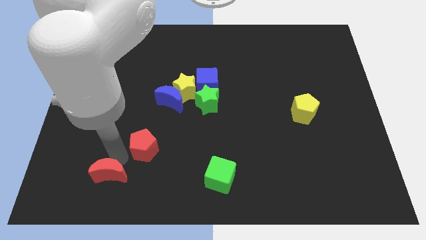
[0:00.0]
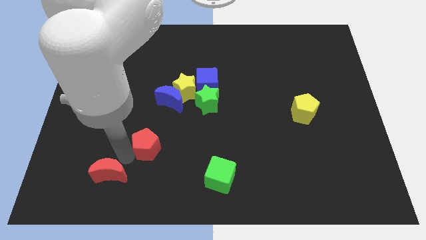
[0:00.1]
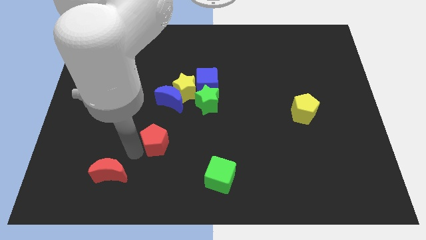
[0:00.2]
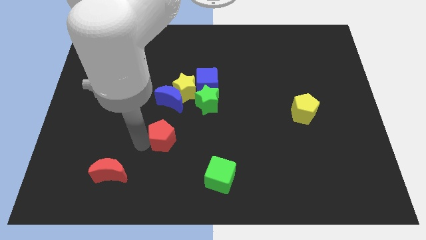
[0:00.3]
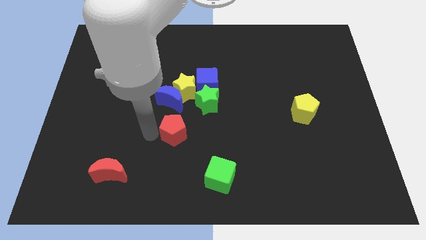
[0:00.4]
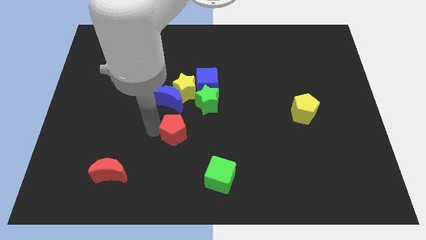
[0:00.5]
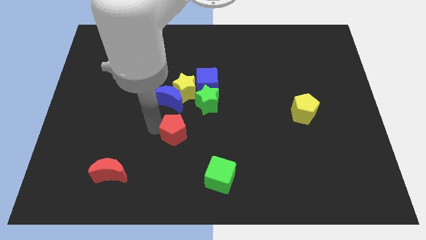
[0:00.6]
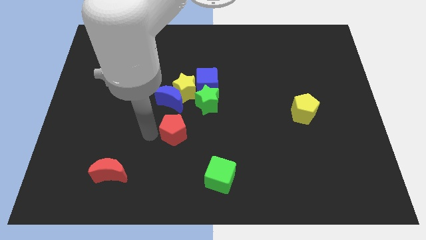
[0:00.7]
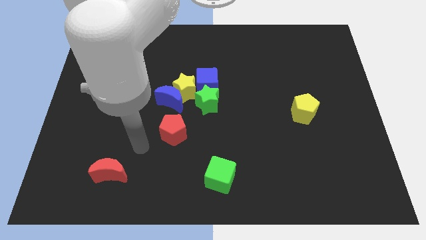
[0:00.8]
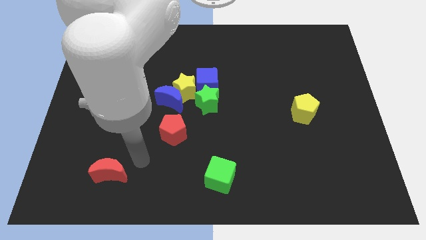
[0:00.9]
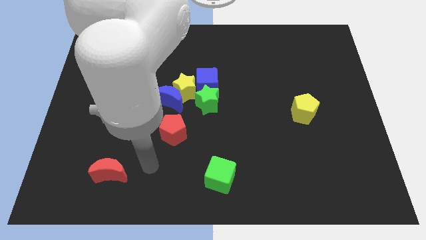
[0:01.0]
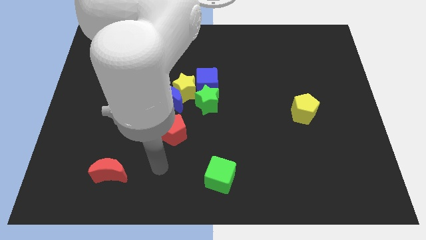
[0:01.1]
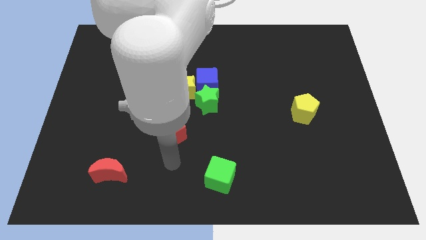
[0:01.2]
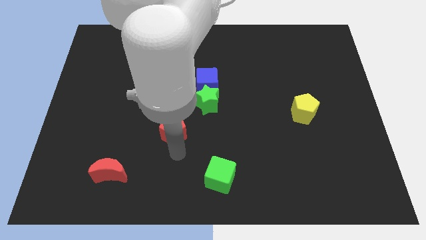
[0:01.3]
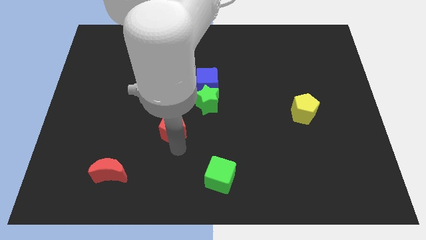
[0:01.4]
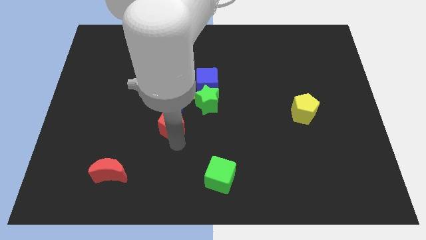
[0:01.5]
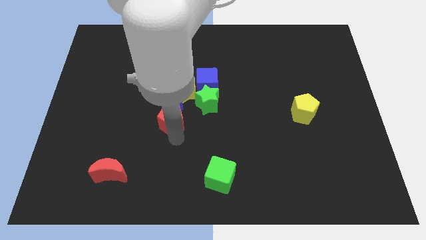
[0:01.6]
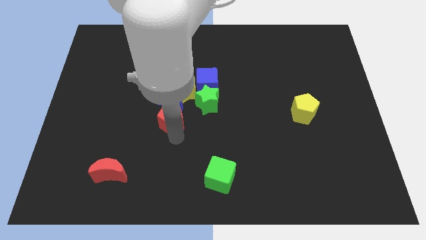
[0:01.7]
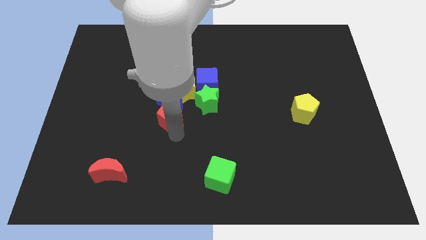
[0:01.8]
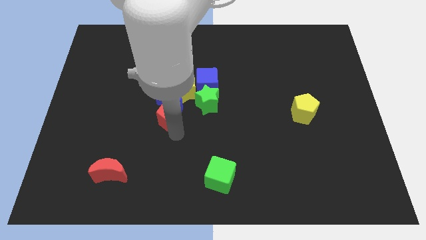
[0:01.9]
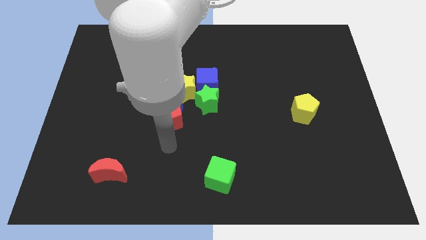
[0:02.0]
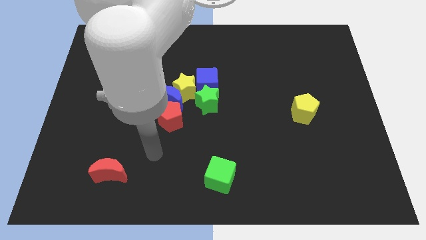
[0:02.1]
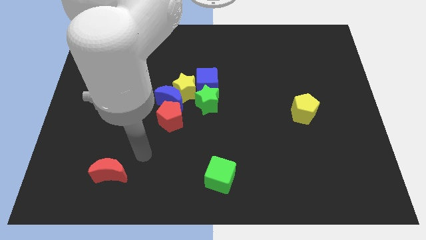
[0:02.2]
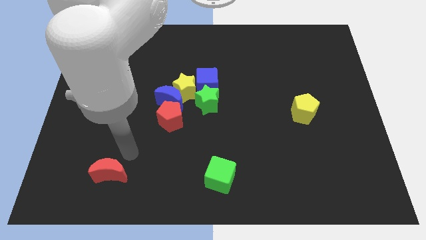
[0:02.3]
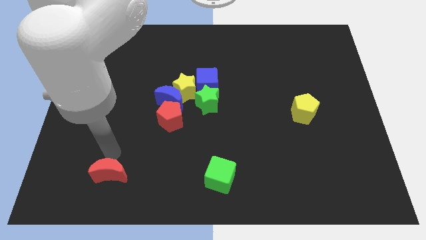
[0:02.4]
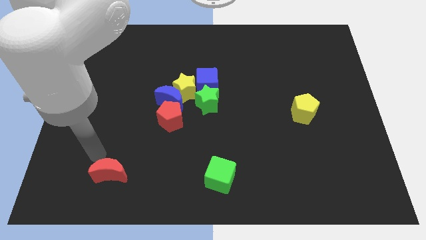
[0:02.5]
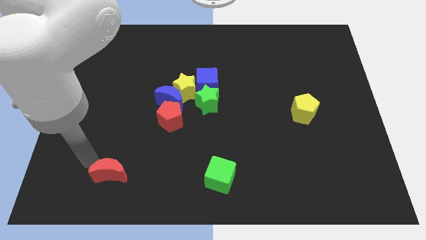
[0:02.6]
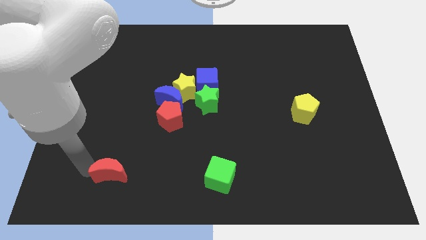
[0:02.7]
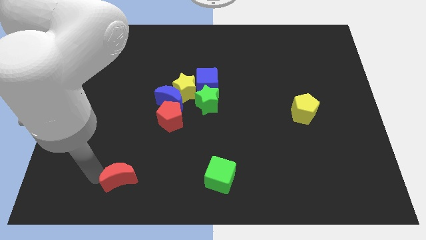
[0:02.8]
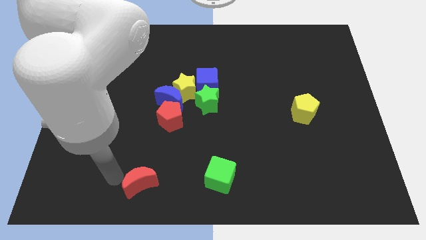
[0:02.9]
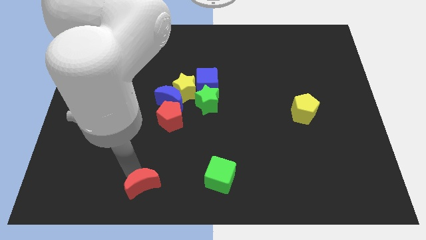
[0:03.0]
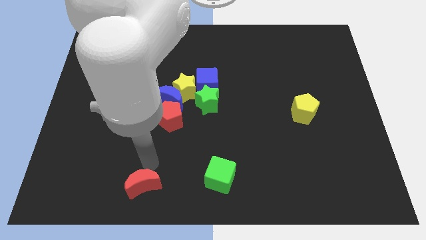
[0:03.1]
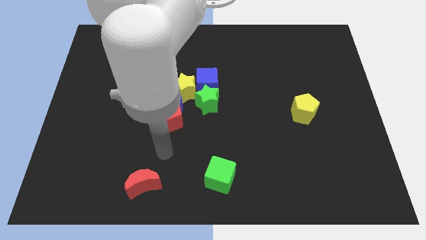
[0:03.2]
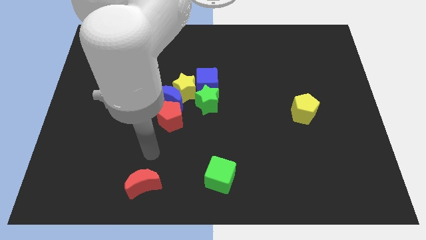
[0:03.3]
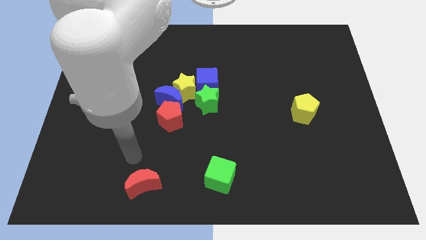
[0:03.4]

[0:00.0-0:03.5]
place the red pentagon below the blue moon

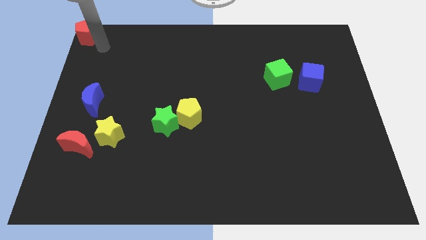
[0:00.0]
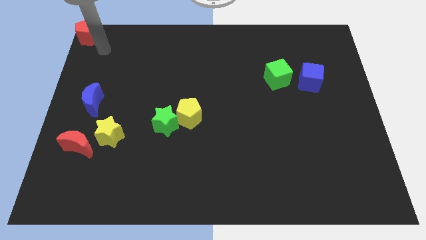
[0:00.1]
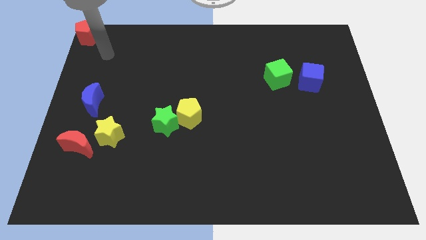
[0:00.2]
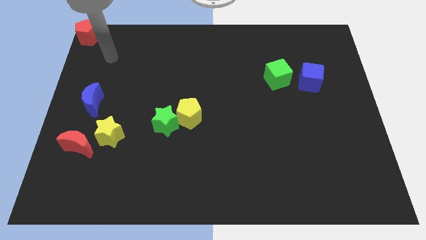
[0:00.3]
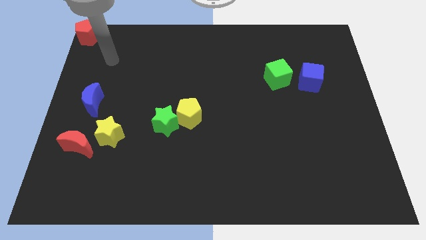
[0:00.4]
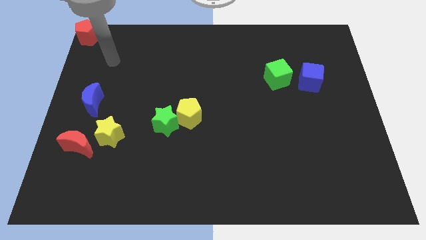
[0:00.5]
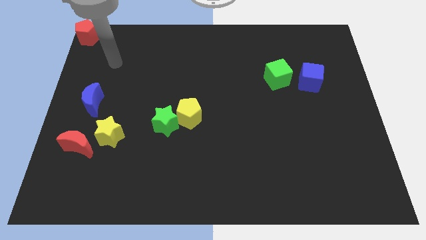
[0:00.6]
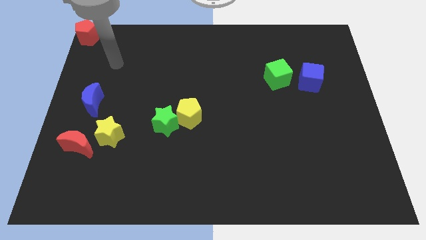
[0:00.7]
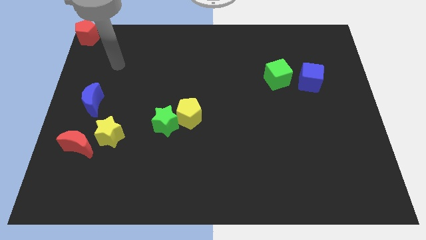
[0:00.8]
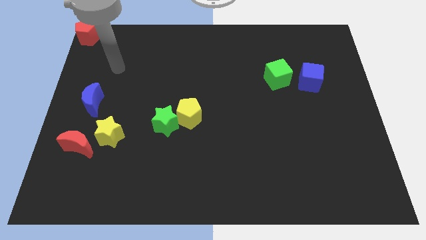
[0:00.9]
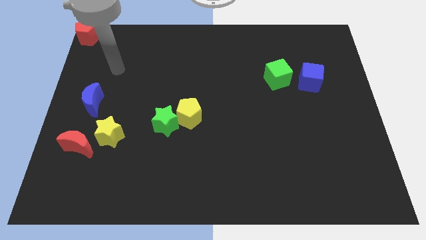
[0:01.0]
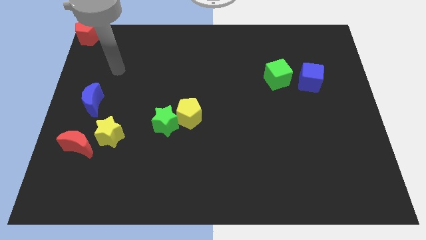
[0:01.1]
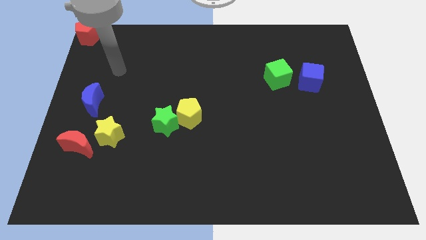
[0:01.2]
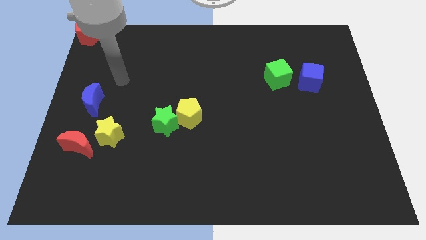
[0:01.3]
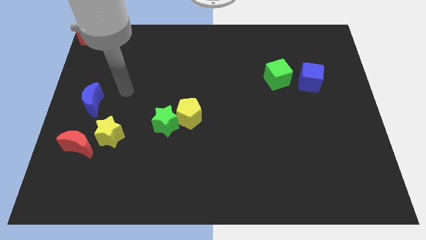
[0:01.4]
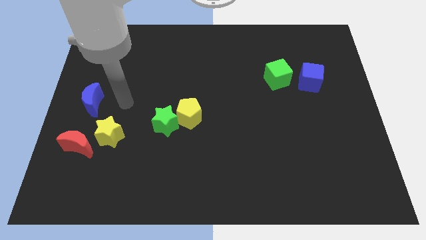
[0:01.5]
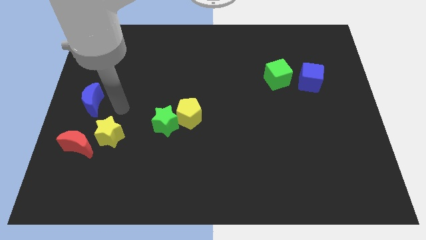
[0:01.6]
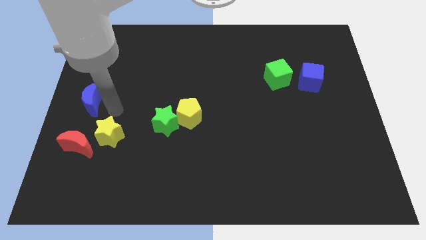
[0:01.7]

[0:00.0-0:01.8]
point your arm at the top of the yellow star

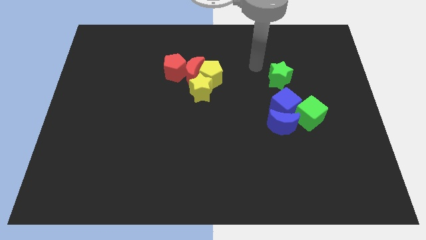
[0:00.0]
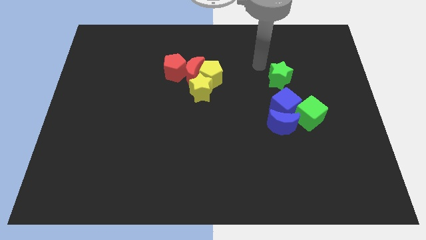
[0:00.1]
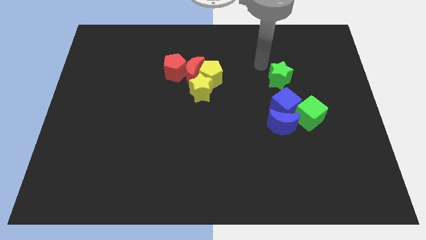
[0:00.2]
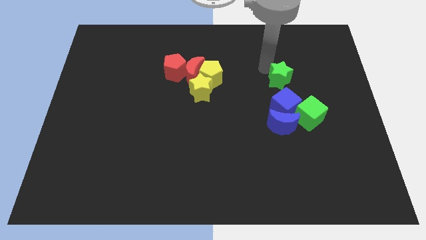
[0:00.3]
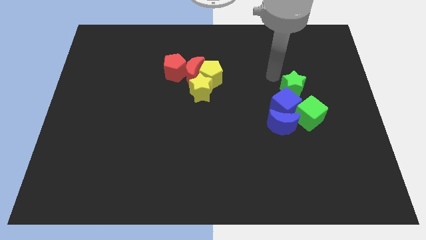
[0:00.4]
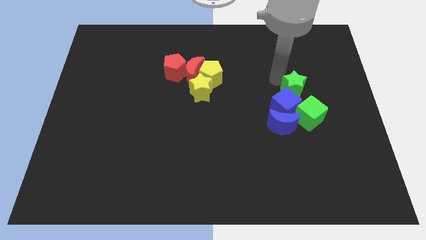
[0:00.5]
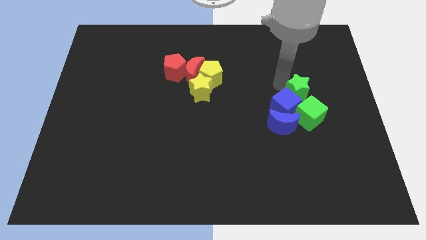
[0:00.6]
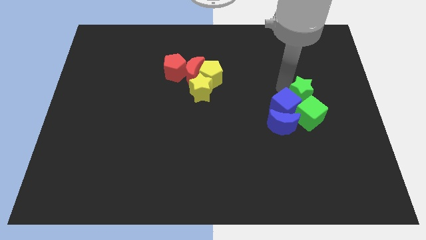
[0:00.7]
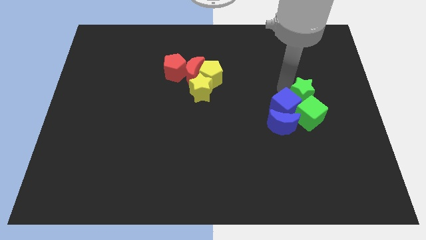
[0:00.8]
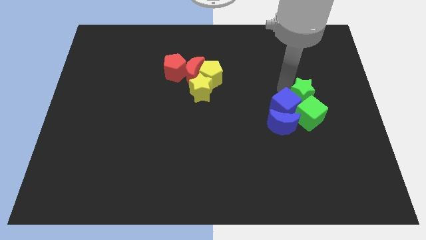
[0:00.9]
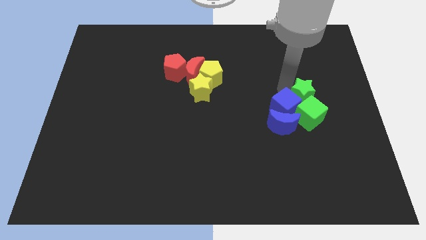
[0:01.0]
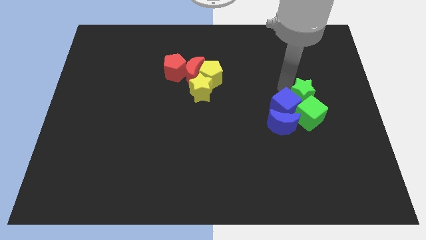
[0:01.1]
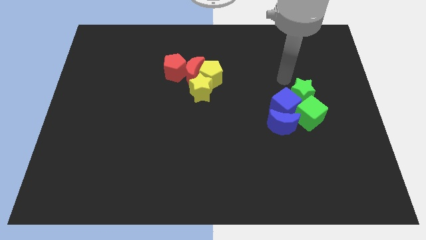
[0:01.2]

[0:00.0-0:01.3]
move the green star close to the green cube

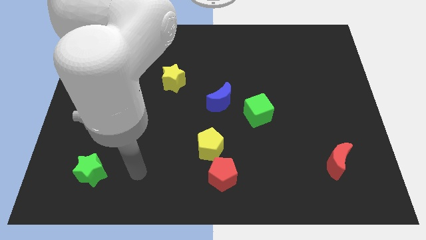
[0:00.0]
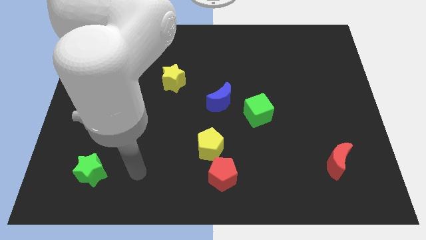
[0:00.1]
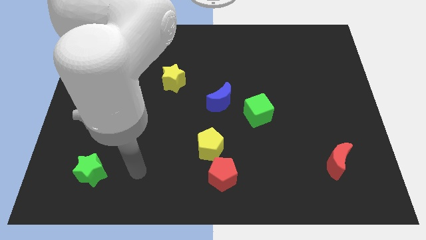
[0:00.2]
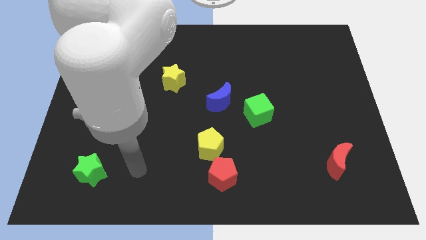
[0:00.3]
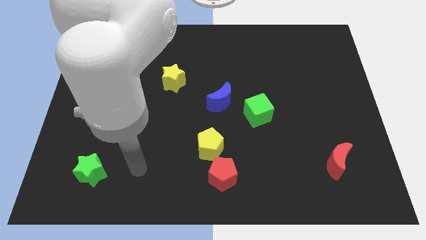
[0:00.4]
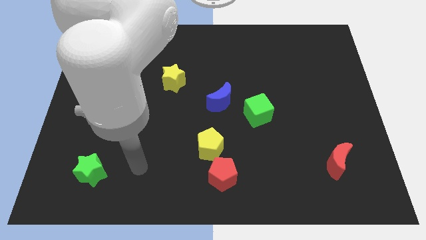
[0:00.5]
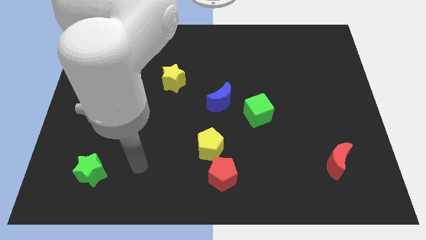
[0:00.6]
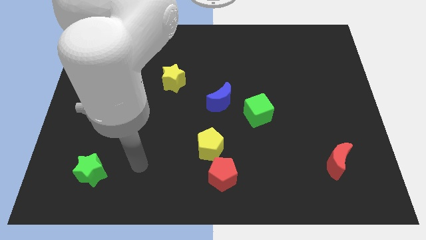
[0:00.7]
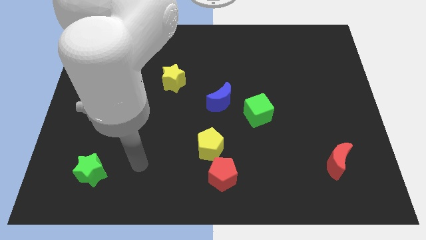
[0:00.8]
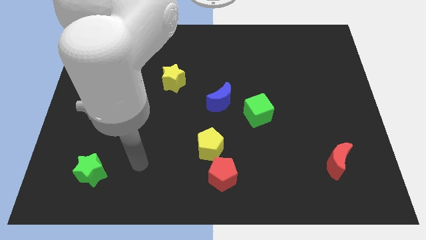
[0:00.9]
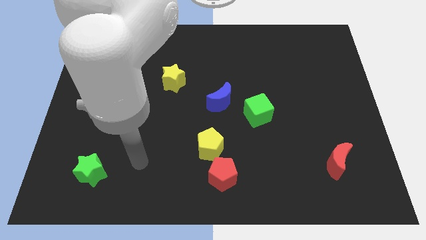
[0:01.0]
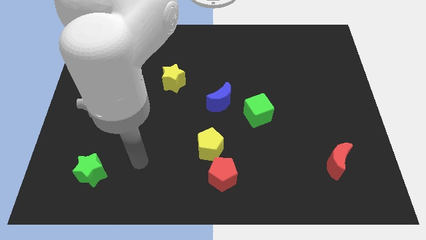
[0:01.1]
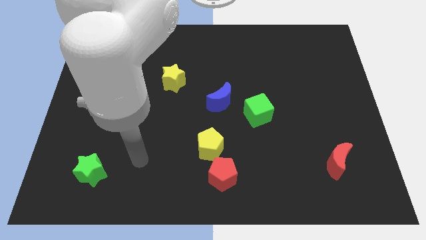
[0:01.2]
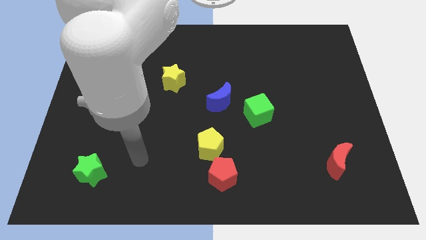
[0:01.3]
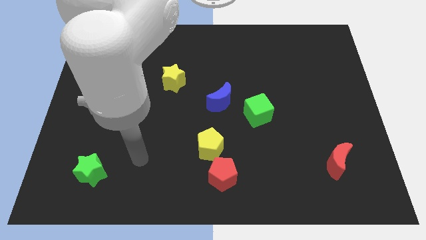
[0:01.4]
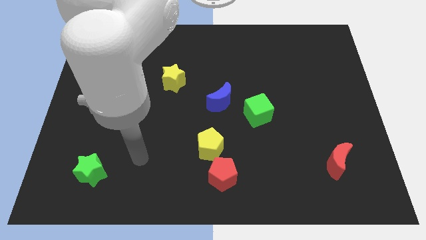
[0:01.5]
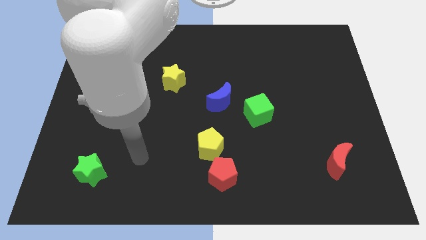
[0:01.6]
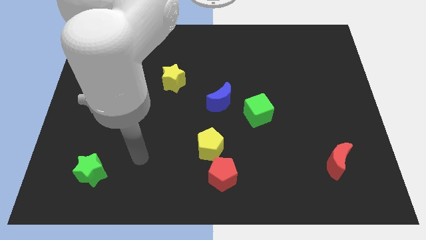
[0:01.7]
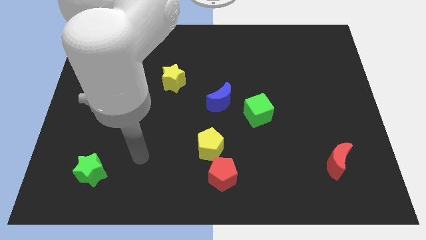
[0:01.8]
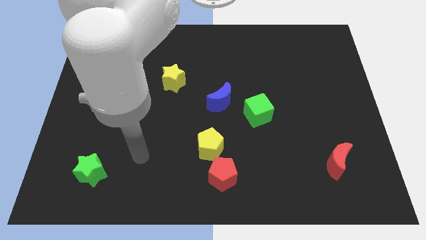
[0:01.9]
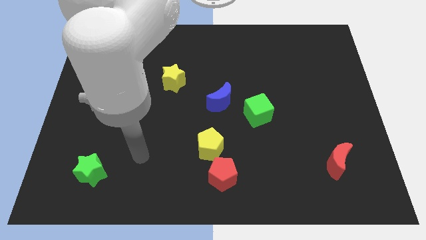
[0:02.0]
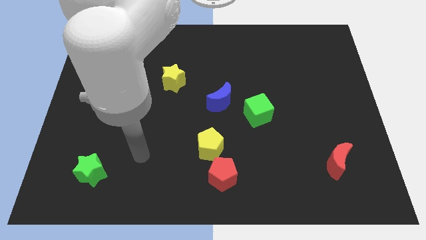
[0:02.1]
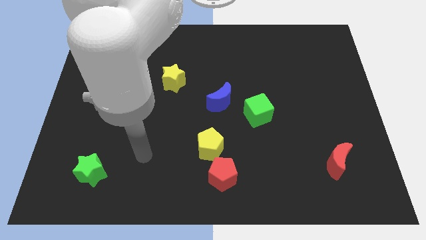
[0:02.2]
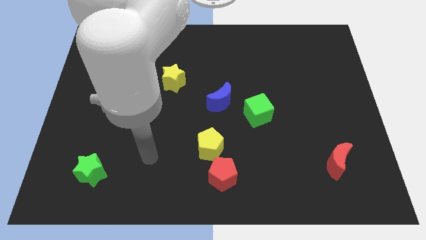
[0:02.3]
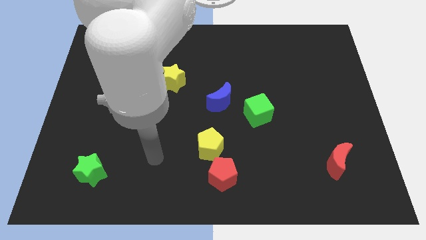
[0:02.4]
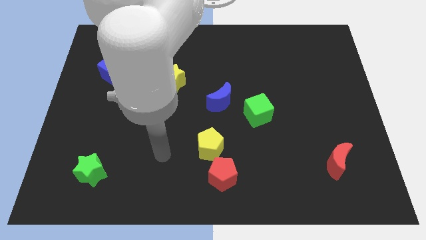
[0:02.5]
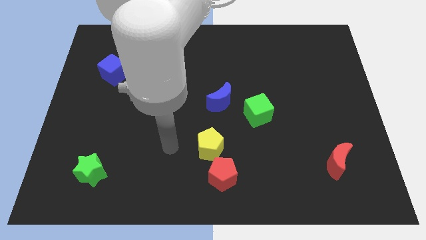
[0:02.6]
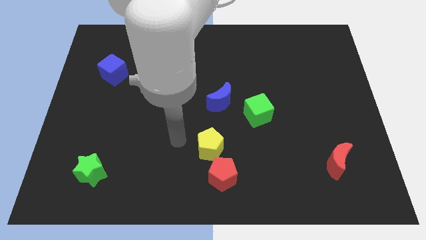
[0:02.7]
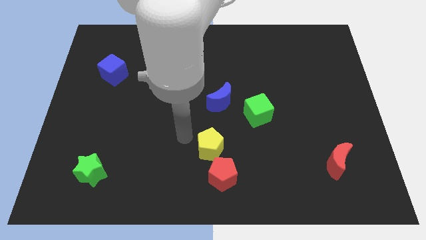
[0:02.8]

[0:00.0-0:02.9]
point your arm at the left of the yellow pentagon
